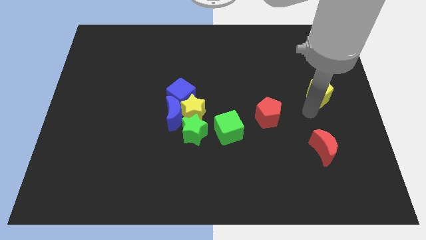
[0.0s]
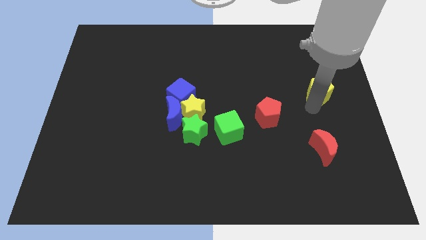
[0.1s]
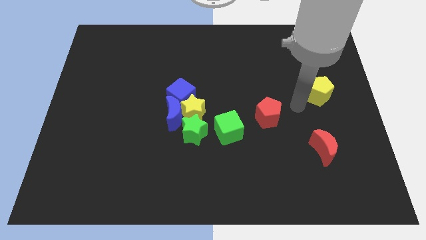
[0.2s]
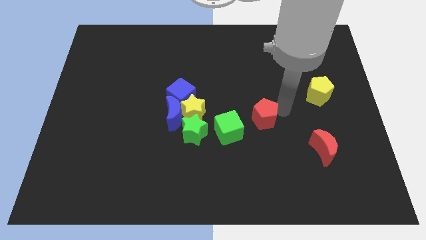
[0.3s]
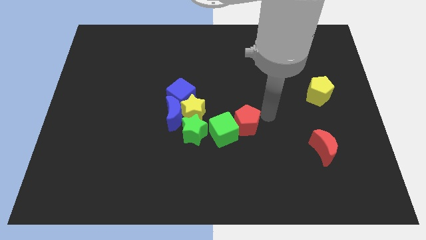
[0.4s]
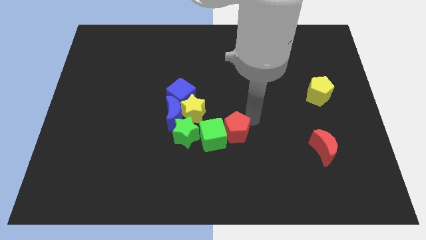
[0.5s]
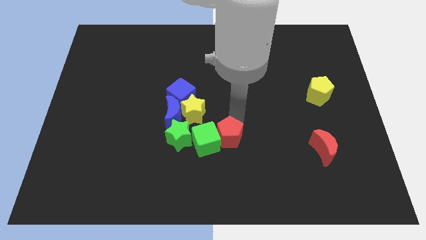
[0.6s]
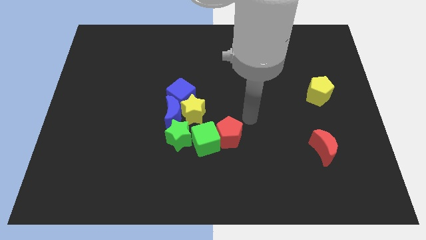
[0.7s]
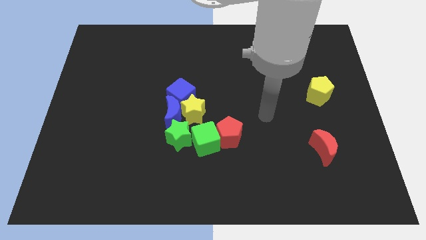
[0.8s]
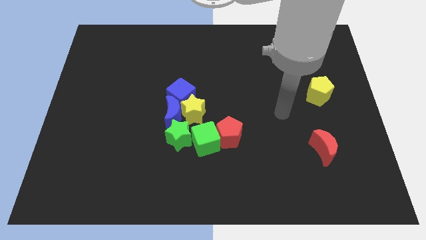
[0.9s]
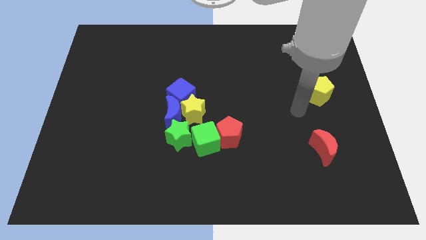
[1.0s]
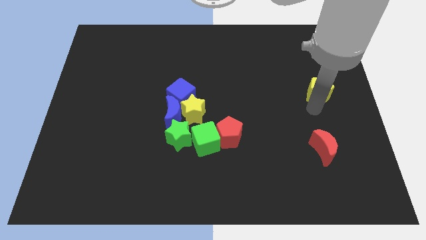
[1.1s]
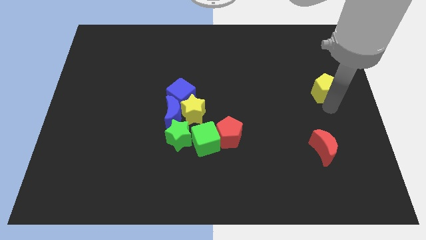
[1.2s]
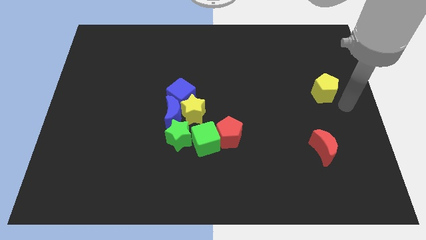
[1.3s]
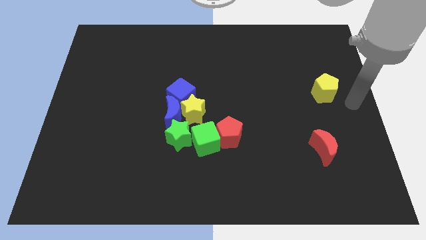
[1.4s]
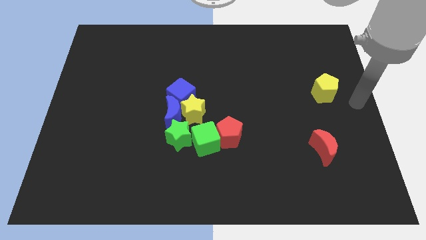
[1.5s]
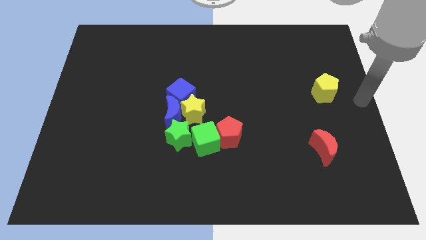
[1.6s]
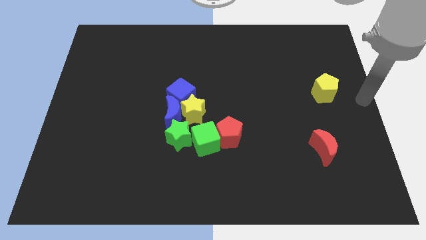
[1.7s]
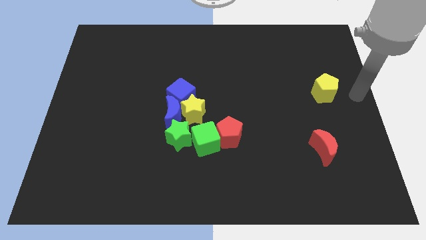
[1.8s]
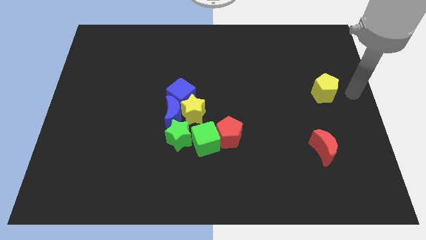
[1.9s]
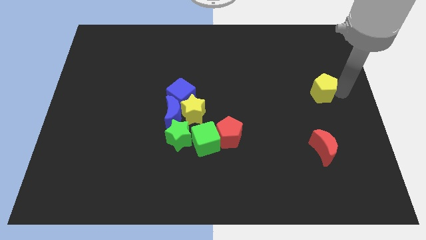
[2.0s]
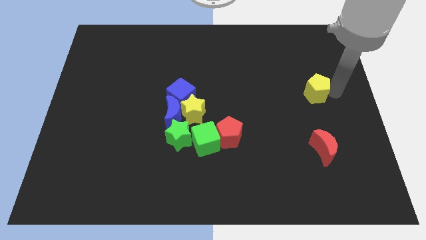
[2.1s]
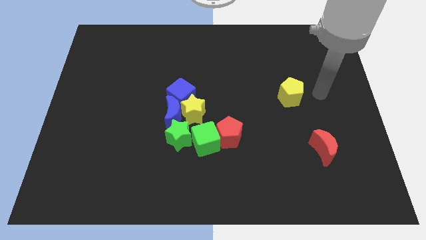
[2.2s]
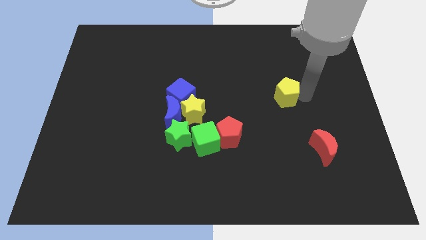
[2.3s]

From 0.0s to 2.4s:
push yellow pentagon above red crescent

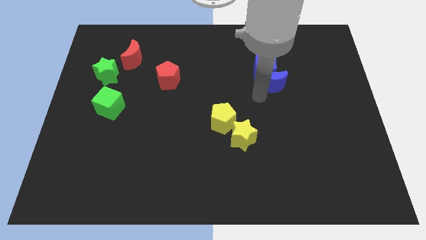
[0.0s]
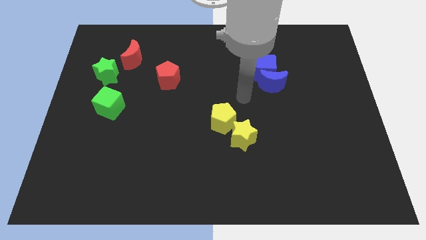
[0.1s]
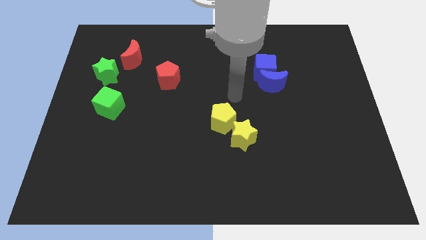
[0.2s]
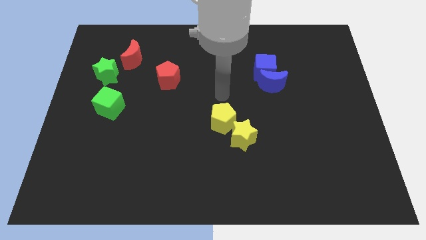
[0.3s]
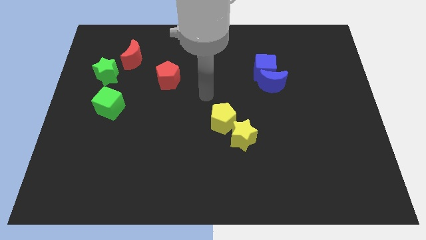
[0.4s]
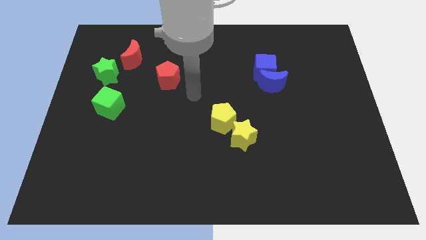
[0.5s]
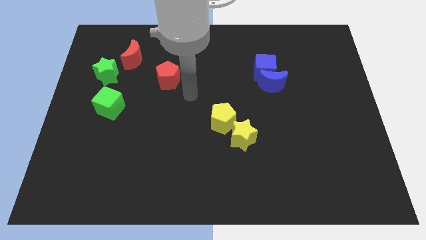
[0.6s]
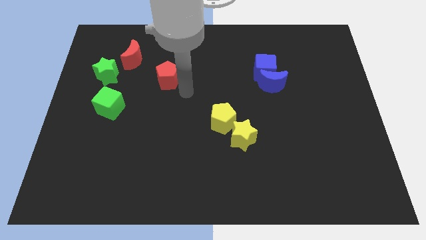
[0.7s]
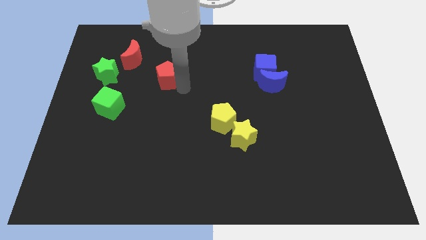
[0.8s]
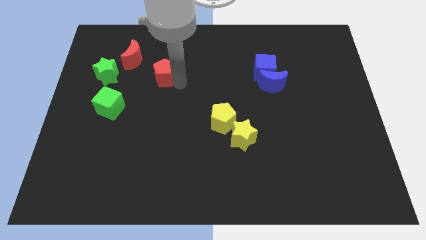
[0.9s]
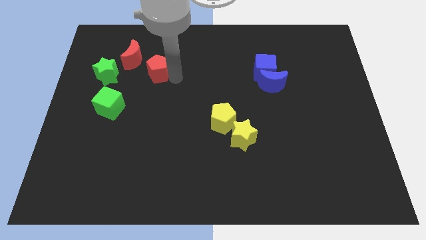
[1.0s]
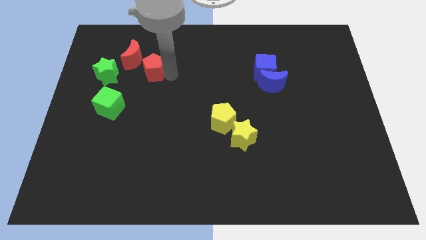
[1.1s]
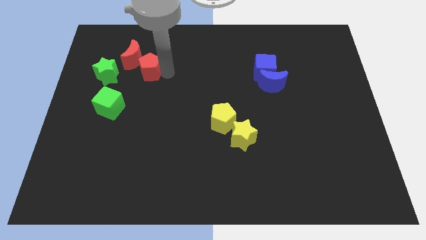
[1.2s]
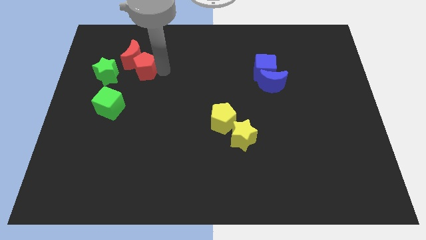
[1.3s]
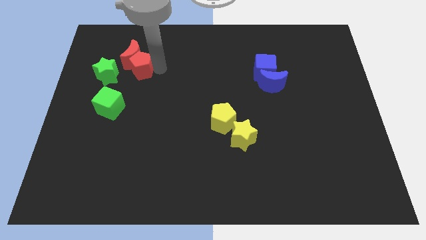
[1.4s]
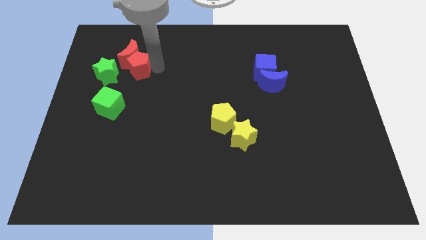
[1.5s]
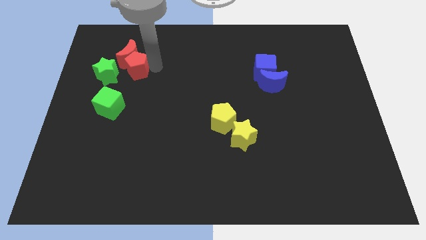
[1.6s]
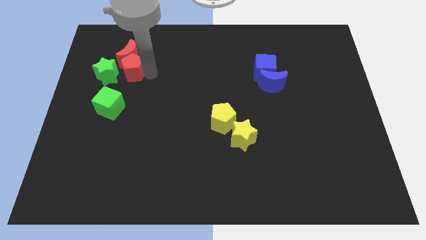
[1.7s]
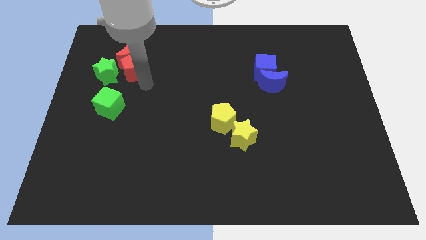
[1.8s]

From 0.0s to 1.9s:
push the red pentagon close to the red crescent

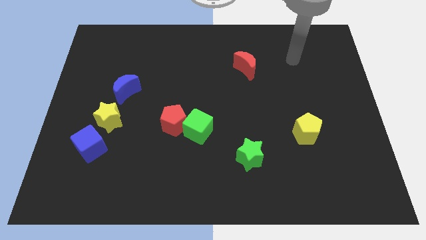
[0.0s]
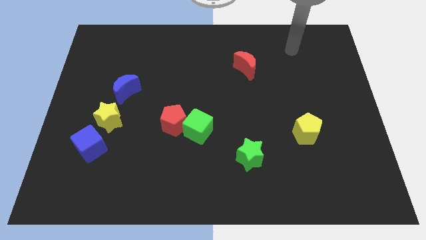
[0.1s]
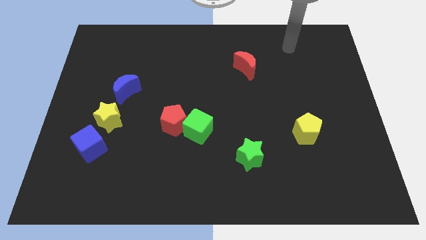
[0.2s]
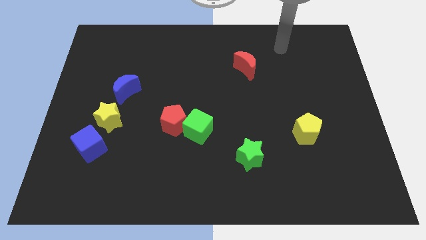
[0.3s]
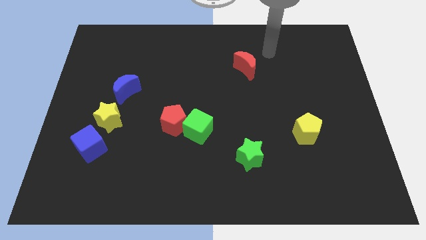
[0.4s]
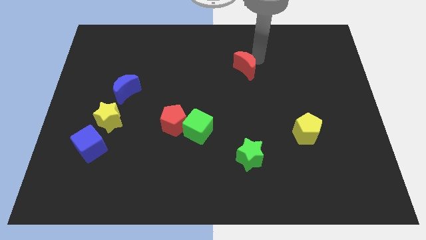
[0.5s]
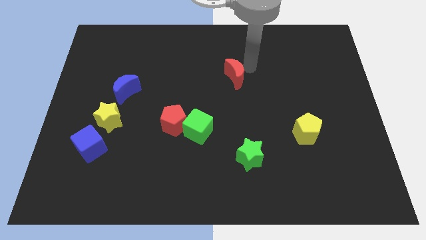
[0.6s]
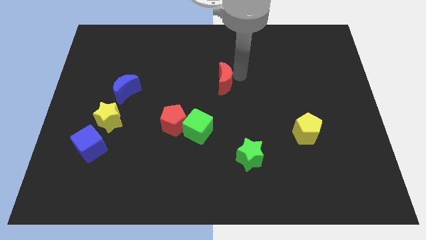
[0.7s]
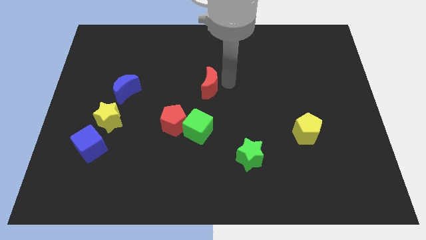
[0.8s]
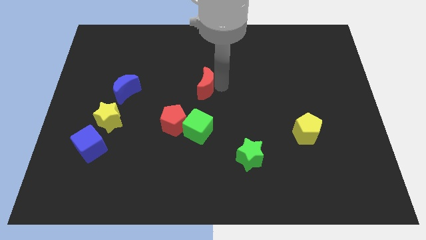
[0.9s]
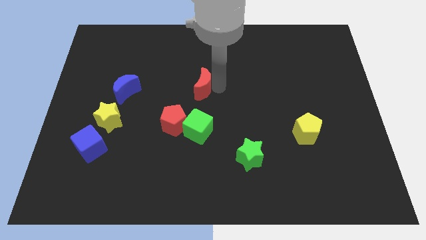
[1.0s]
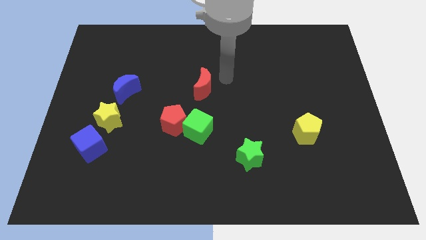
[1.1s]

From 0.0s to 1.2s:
place the red moon above the green cube

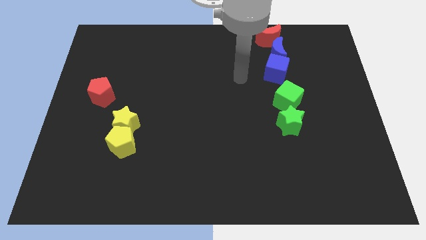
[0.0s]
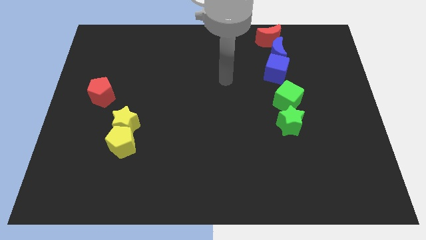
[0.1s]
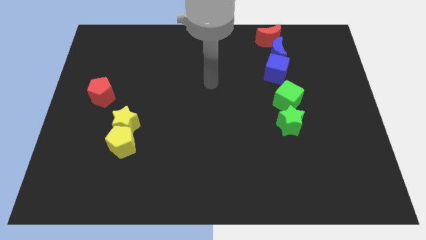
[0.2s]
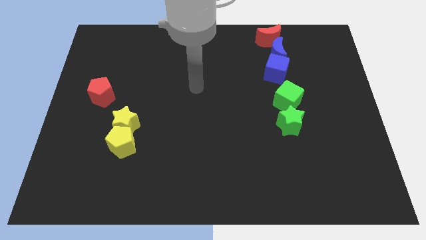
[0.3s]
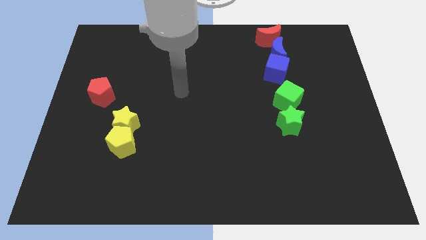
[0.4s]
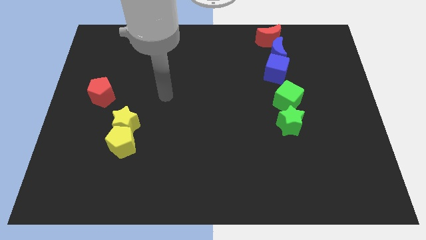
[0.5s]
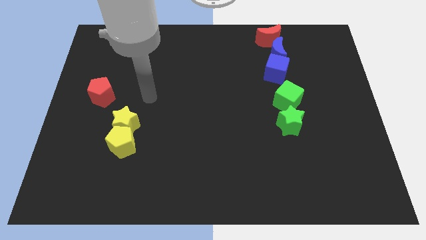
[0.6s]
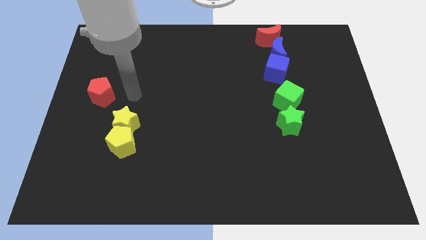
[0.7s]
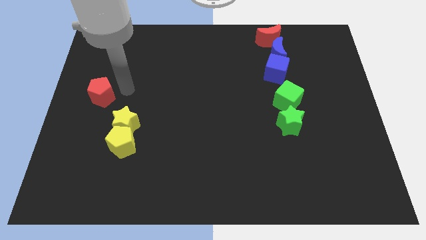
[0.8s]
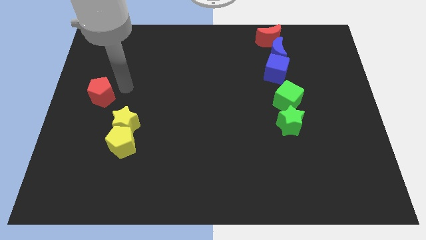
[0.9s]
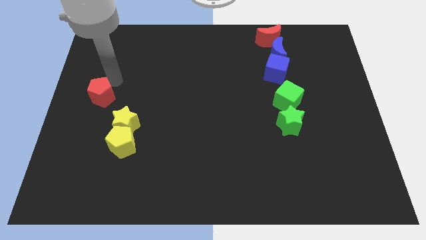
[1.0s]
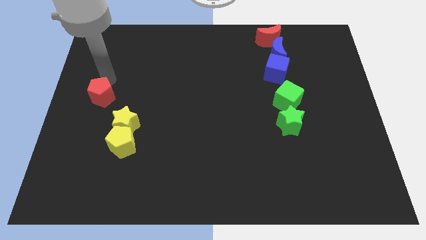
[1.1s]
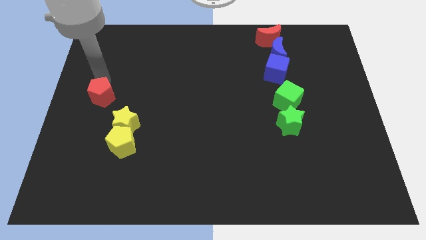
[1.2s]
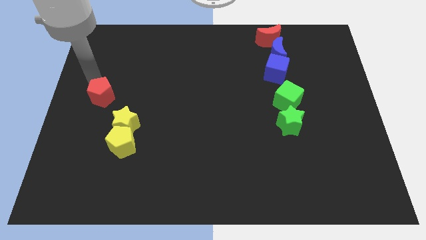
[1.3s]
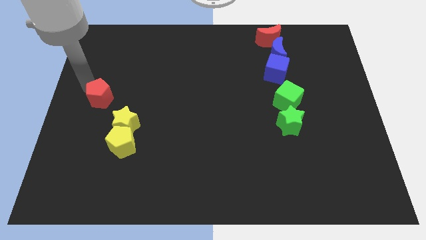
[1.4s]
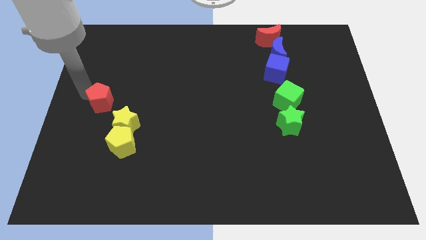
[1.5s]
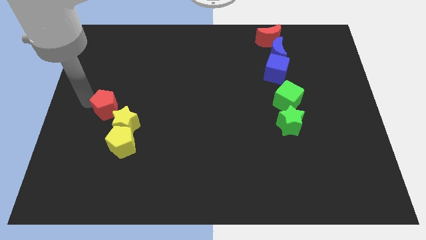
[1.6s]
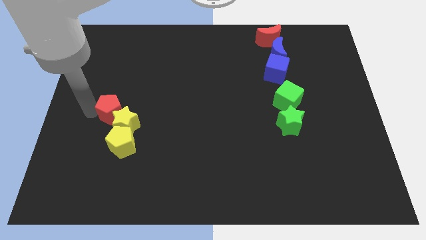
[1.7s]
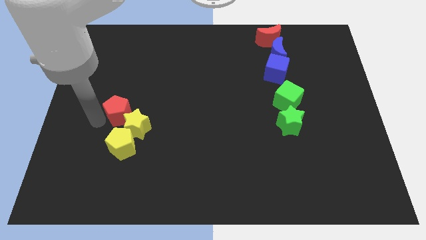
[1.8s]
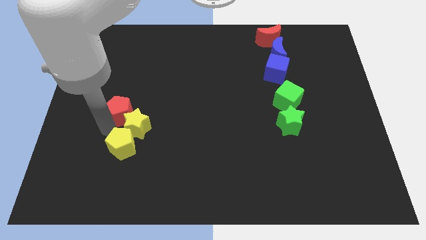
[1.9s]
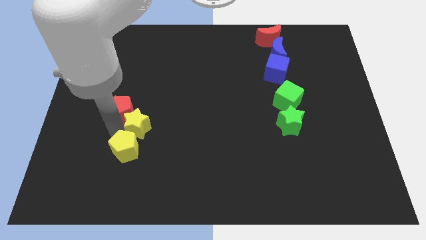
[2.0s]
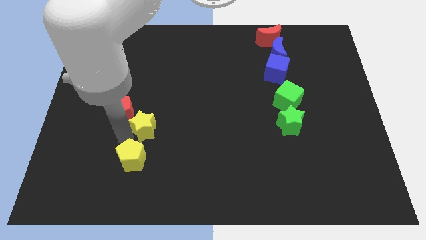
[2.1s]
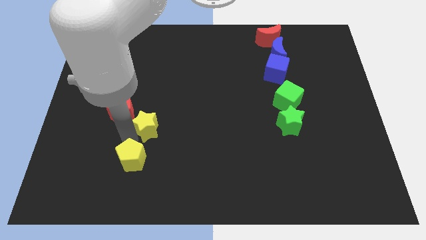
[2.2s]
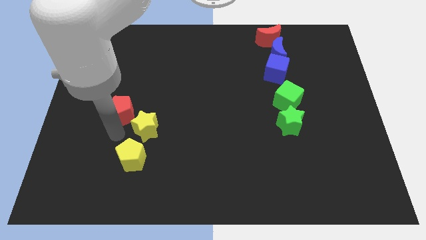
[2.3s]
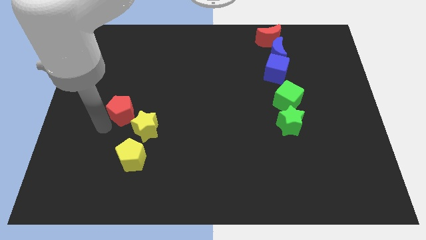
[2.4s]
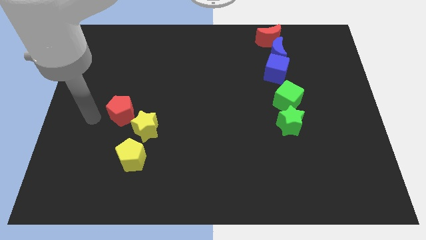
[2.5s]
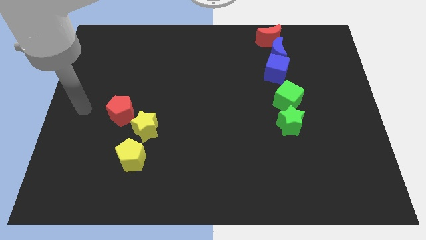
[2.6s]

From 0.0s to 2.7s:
separate the yellow pentagon from yellow star

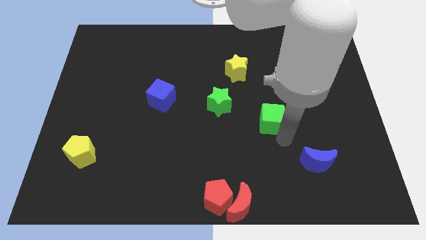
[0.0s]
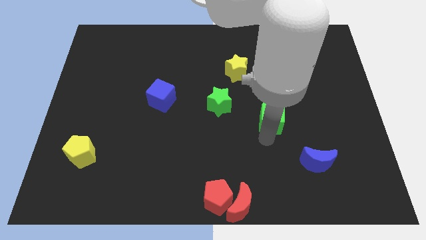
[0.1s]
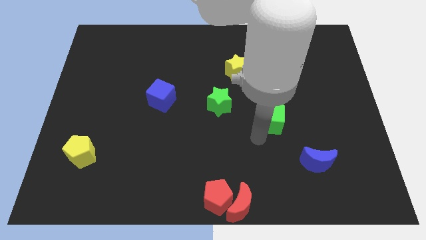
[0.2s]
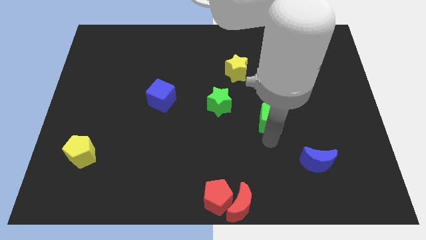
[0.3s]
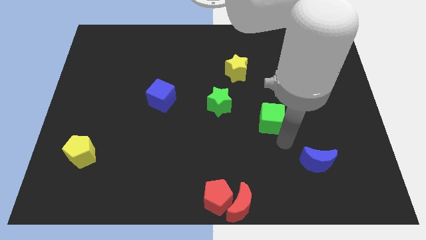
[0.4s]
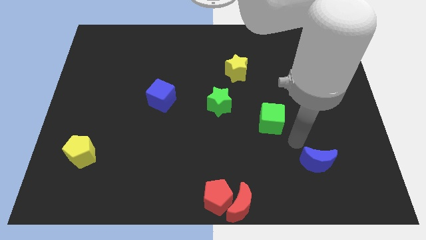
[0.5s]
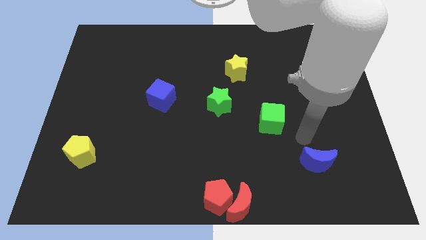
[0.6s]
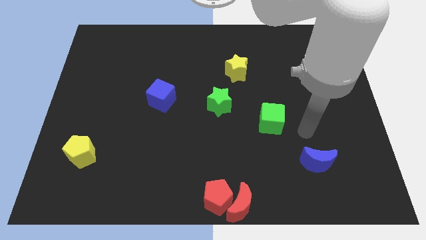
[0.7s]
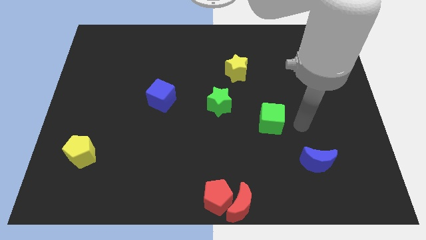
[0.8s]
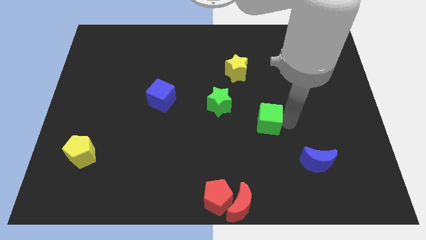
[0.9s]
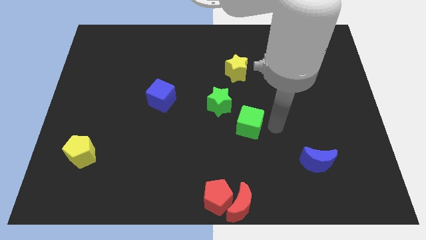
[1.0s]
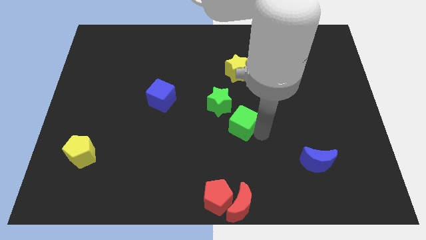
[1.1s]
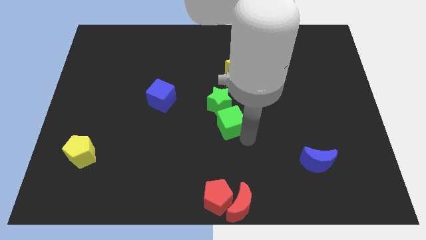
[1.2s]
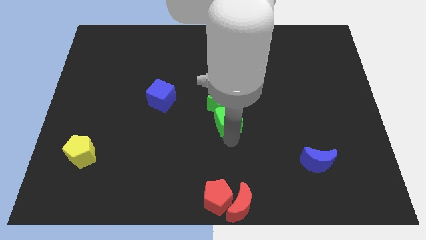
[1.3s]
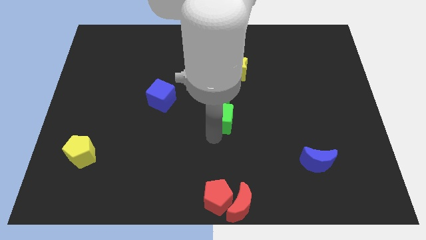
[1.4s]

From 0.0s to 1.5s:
move the green cube to the bottom of the green star
